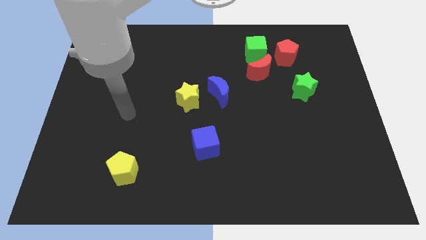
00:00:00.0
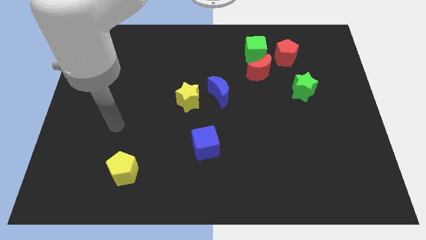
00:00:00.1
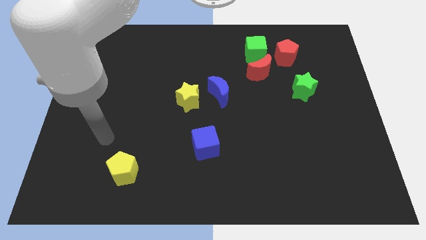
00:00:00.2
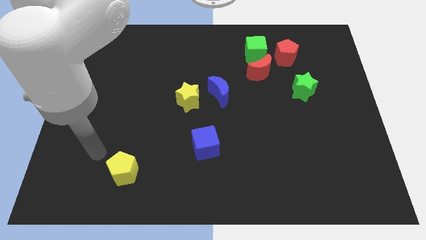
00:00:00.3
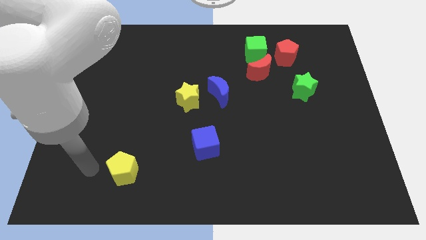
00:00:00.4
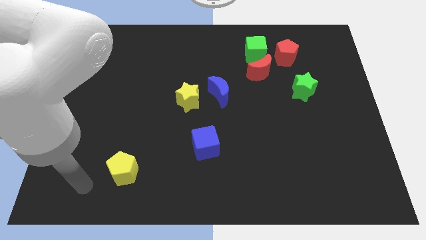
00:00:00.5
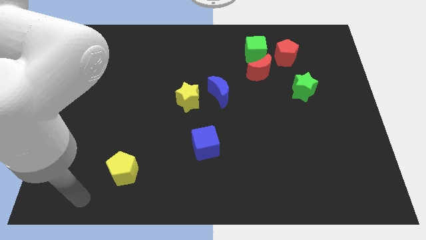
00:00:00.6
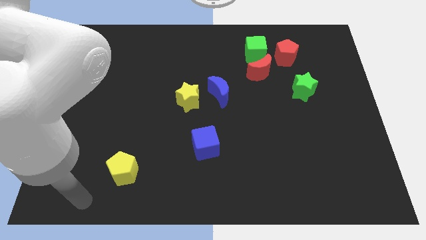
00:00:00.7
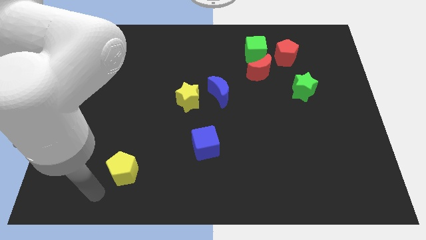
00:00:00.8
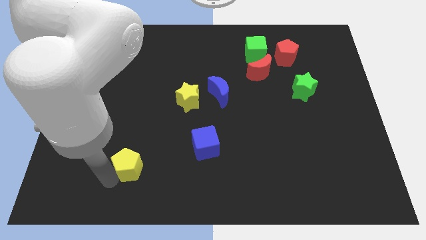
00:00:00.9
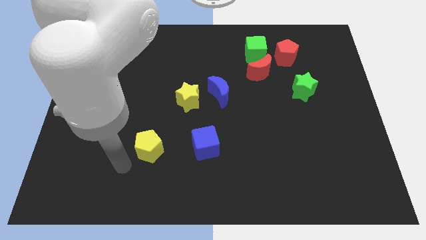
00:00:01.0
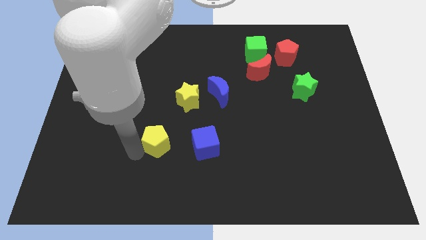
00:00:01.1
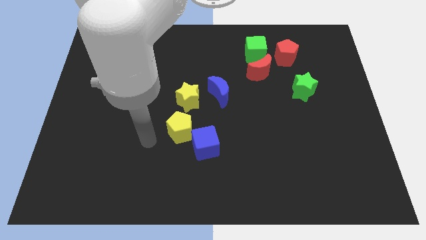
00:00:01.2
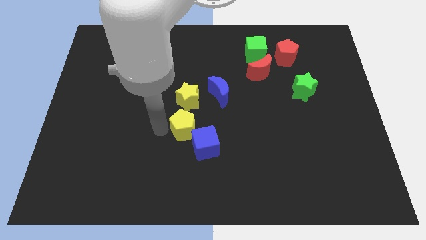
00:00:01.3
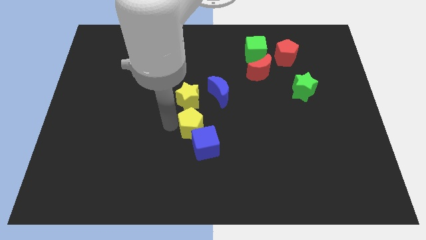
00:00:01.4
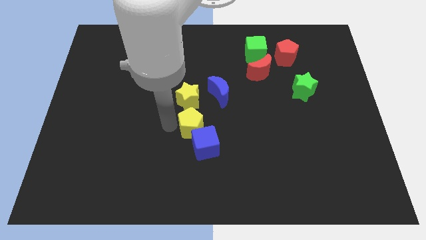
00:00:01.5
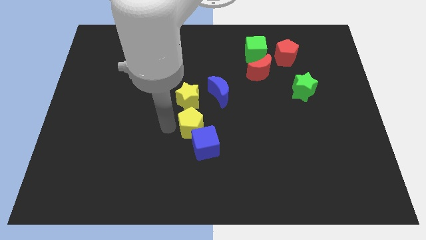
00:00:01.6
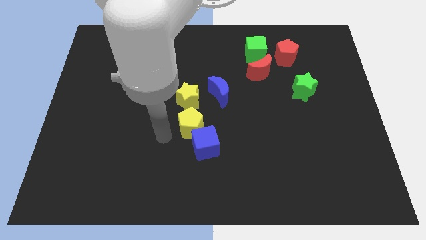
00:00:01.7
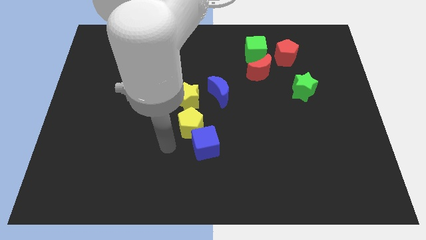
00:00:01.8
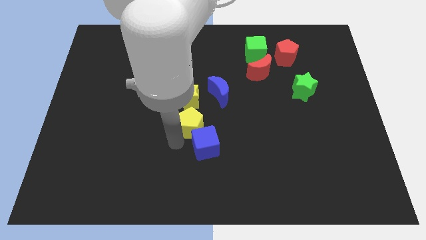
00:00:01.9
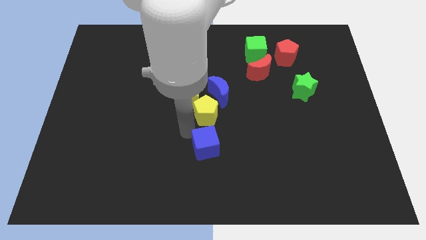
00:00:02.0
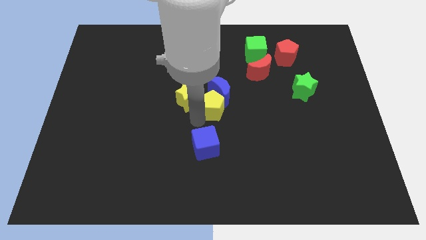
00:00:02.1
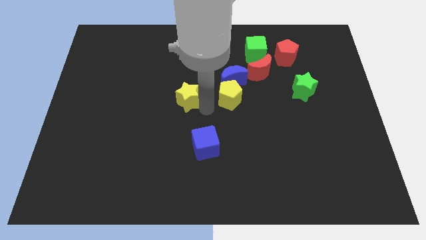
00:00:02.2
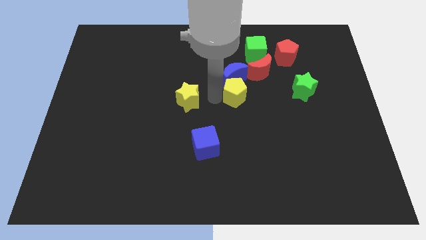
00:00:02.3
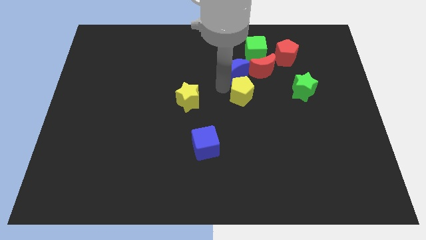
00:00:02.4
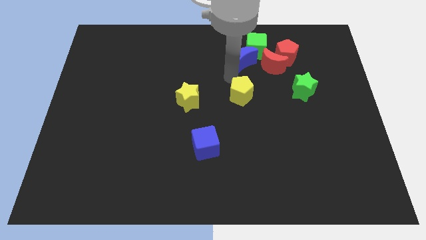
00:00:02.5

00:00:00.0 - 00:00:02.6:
push the yellow pentagon into the blue moon

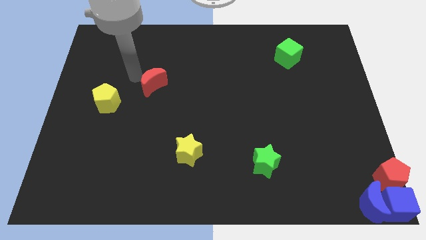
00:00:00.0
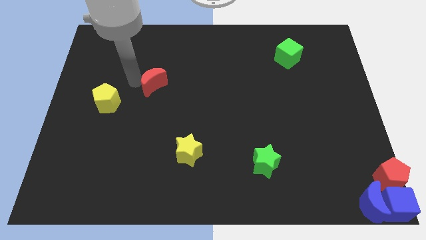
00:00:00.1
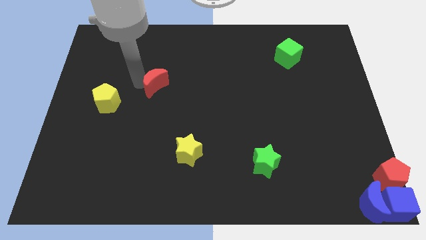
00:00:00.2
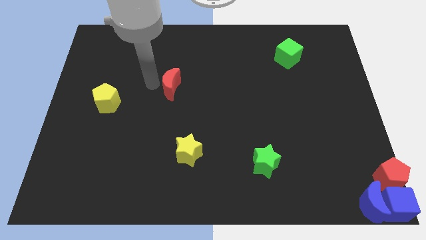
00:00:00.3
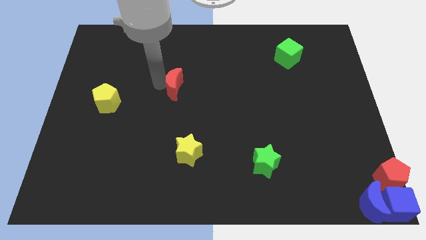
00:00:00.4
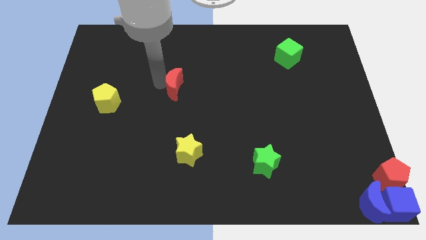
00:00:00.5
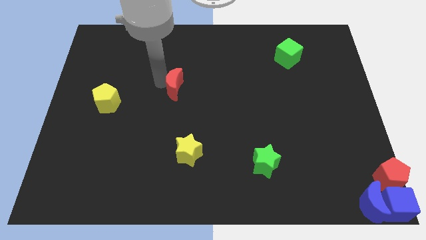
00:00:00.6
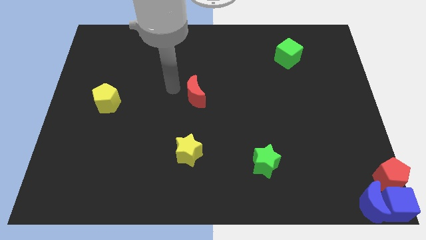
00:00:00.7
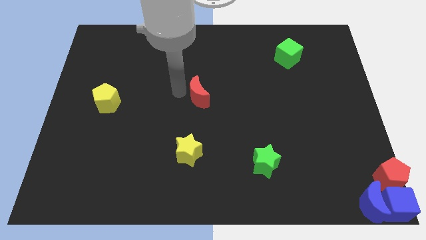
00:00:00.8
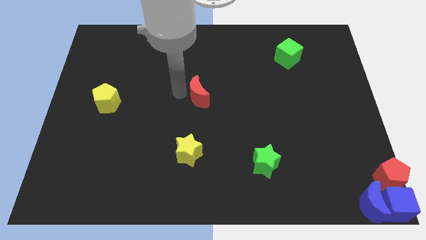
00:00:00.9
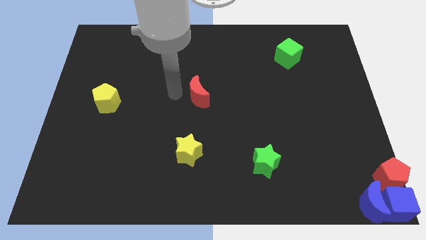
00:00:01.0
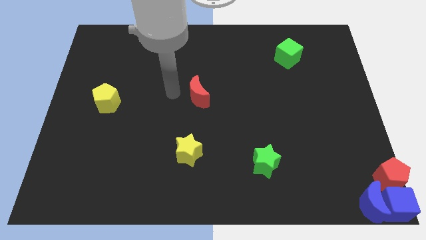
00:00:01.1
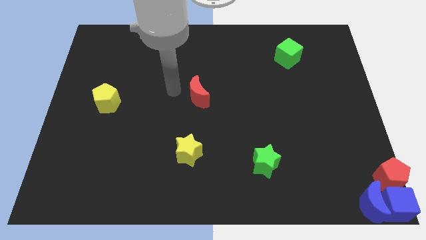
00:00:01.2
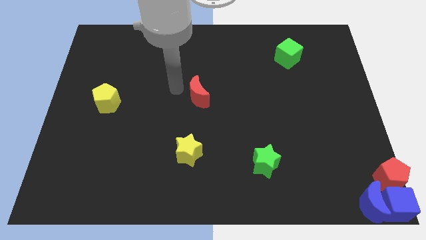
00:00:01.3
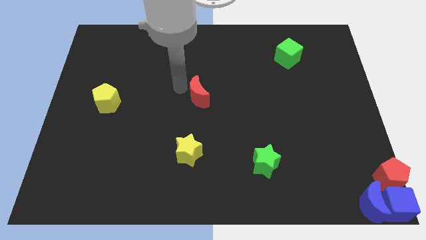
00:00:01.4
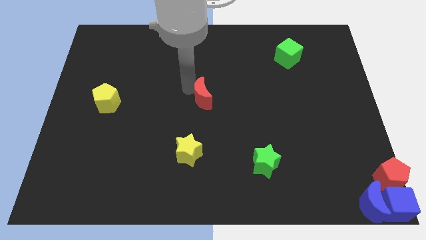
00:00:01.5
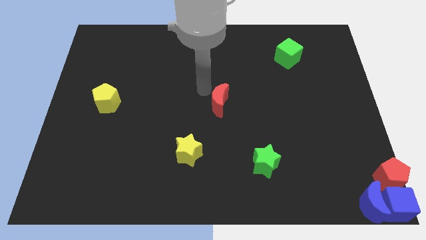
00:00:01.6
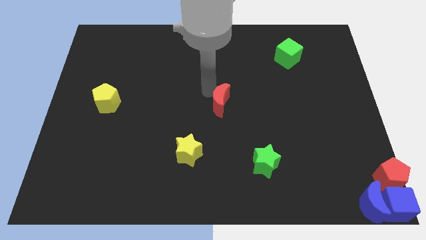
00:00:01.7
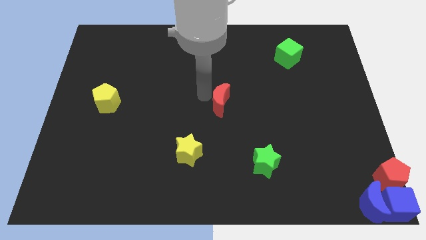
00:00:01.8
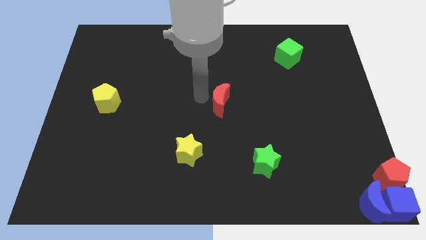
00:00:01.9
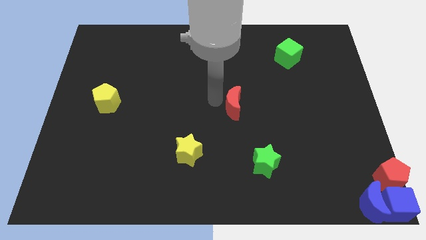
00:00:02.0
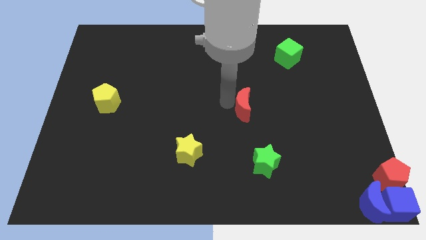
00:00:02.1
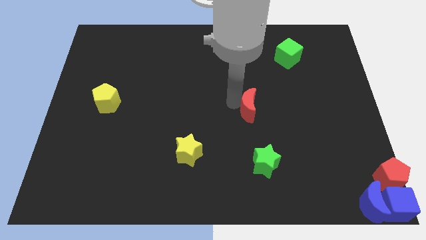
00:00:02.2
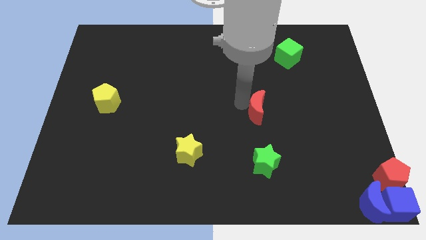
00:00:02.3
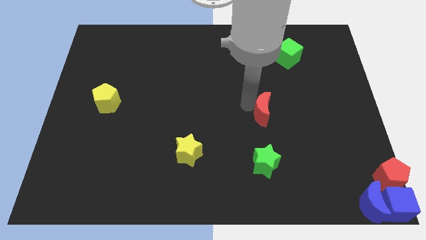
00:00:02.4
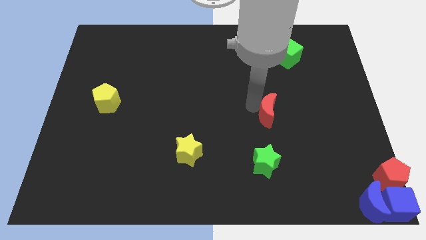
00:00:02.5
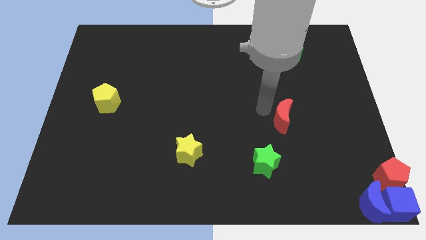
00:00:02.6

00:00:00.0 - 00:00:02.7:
place the red crescent in between the green blocks

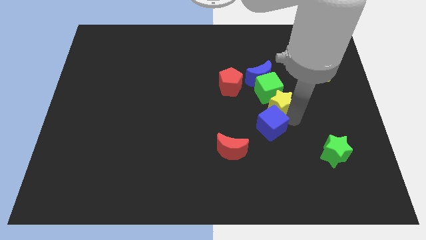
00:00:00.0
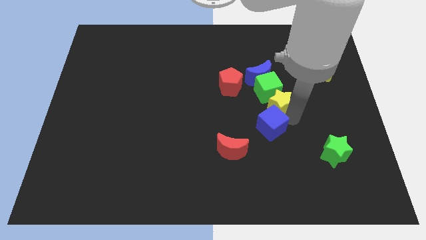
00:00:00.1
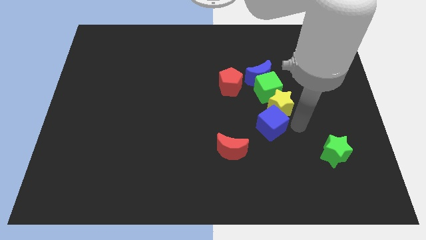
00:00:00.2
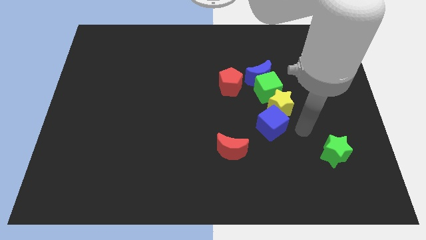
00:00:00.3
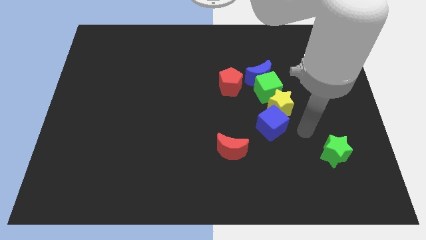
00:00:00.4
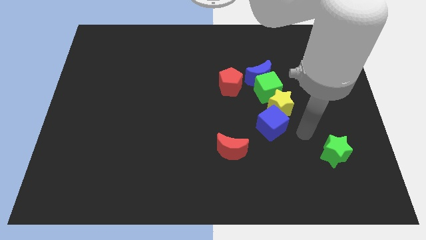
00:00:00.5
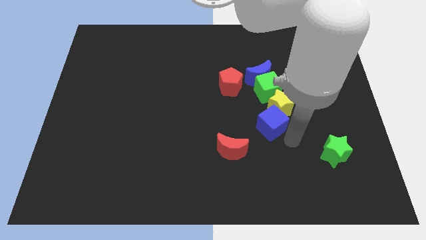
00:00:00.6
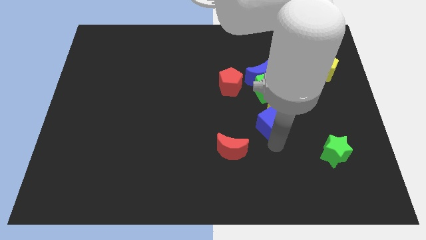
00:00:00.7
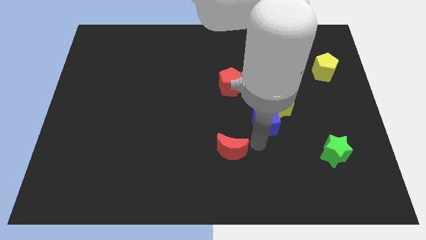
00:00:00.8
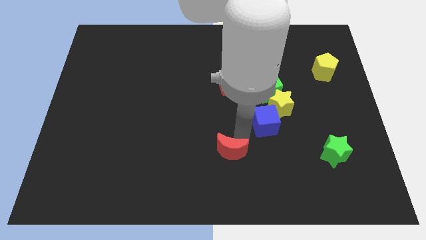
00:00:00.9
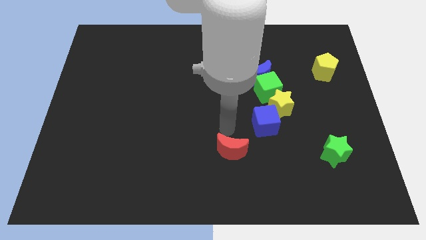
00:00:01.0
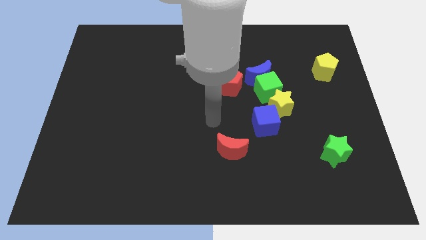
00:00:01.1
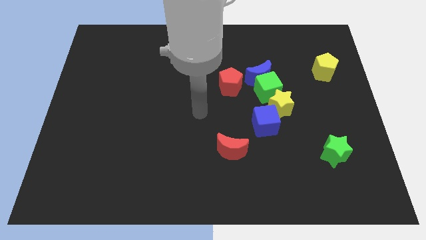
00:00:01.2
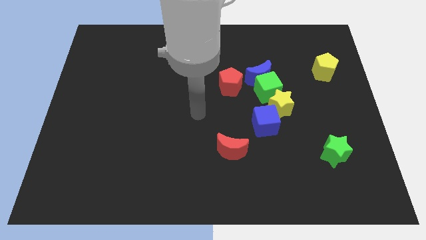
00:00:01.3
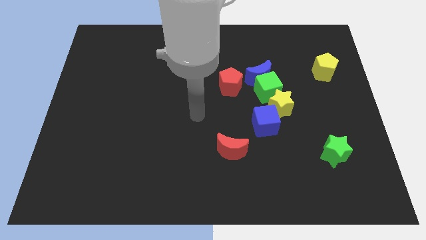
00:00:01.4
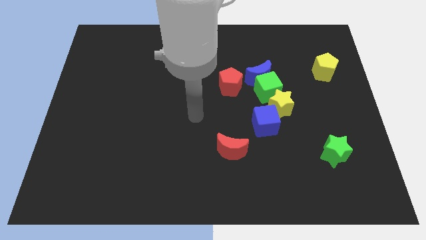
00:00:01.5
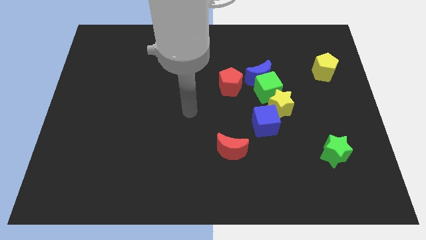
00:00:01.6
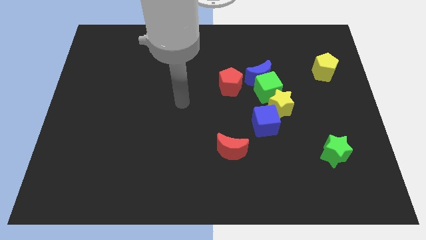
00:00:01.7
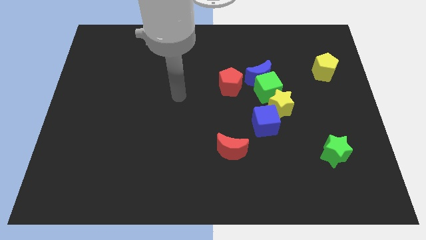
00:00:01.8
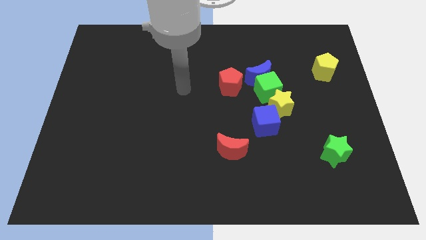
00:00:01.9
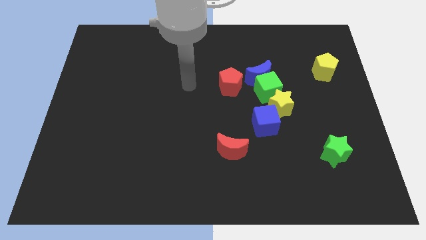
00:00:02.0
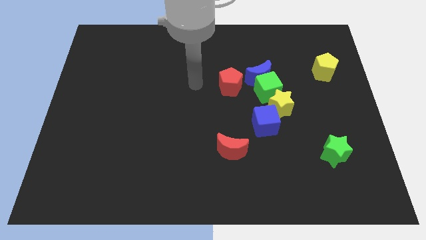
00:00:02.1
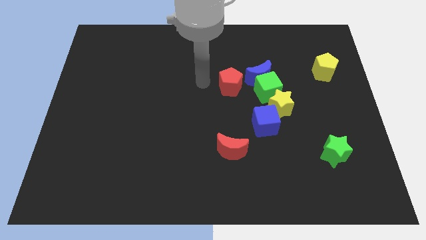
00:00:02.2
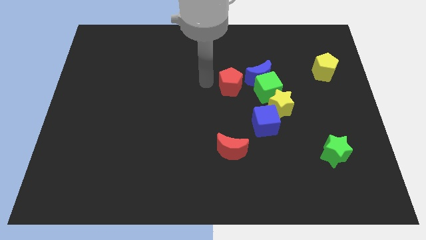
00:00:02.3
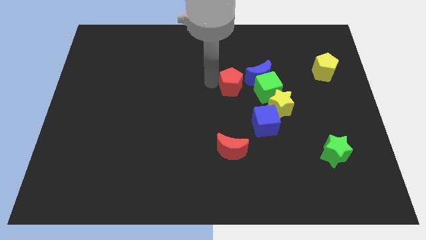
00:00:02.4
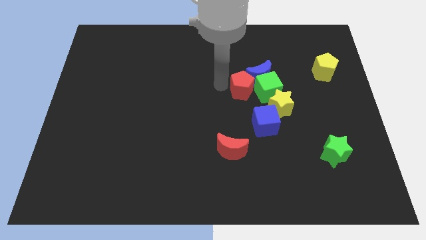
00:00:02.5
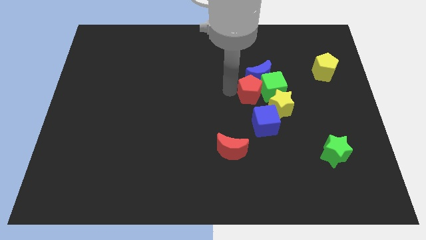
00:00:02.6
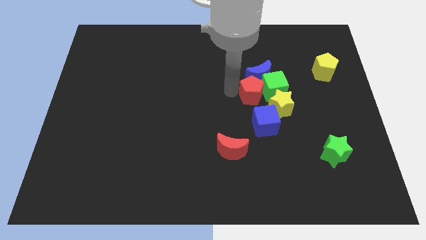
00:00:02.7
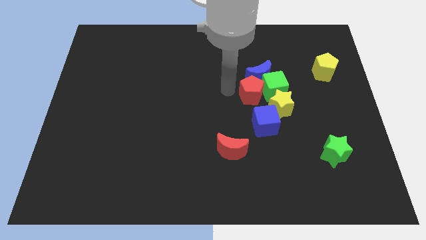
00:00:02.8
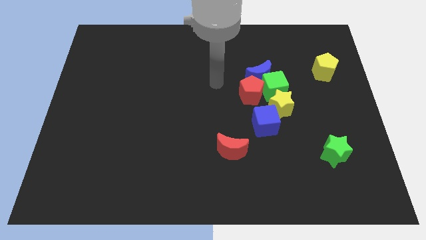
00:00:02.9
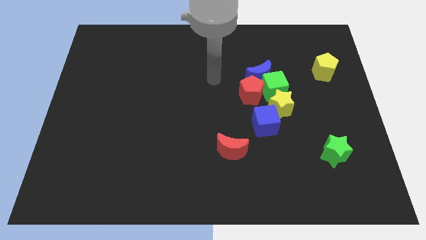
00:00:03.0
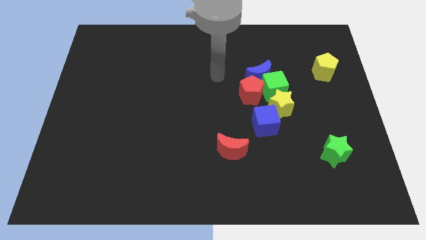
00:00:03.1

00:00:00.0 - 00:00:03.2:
push the red pentagon close to the green cube

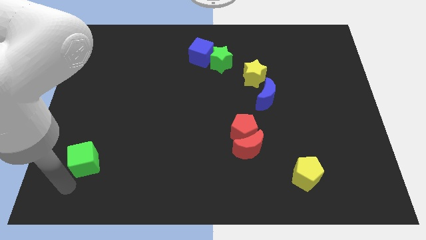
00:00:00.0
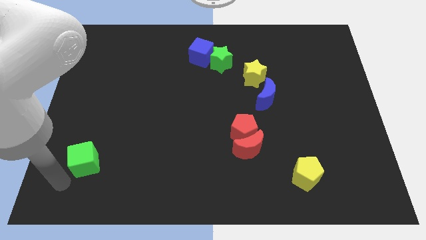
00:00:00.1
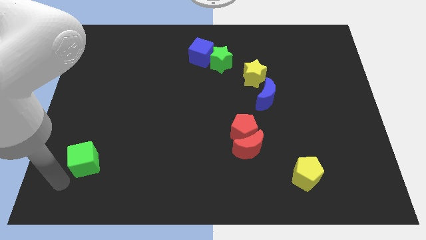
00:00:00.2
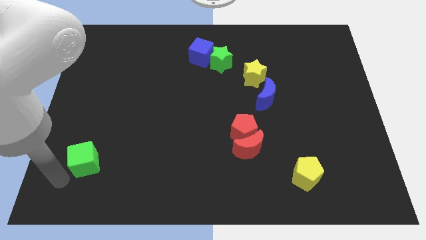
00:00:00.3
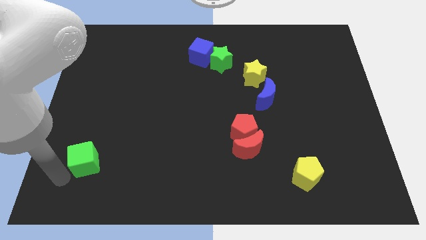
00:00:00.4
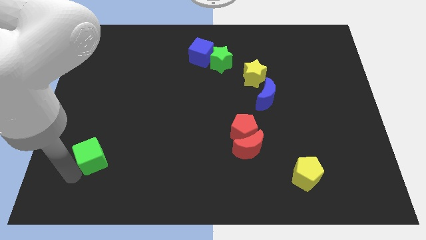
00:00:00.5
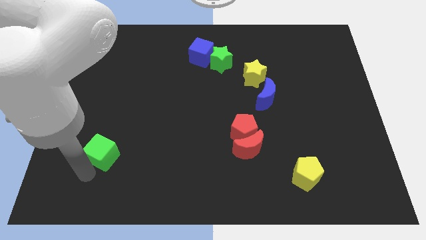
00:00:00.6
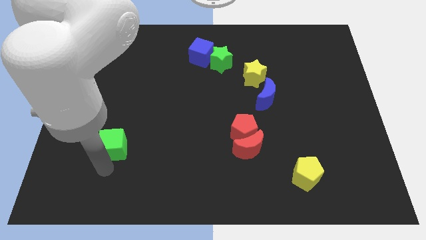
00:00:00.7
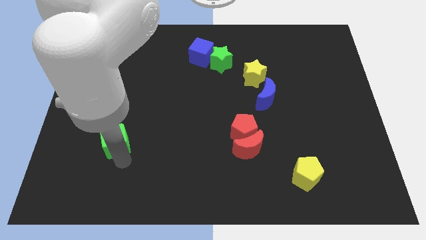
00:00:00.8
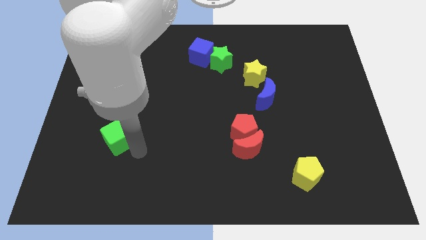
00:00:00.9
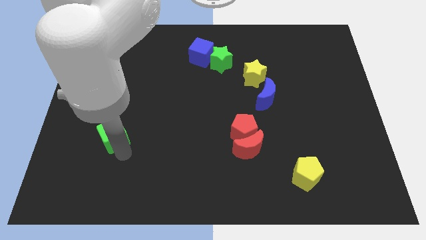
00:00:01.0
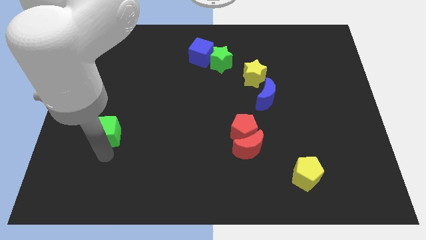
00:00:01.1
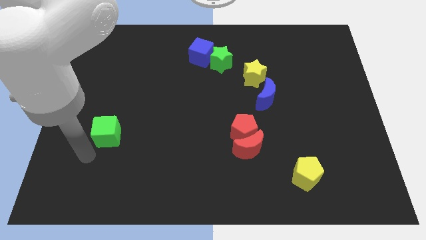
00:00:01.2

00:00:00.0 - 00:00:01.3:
move the green cube to the left of the red blocks
